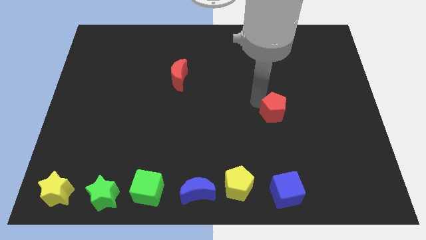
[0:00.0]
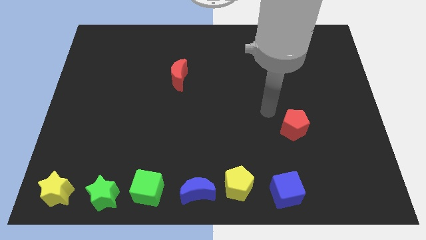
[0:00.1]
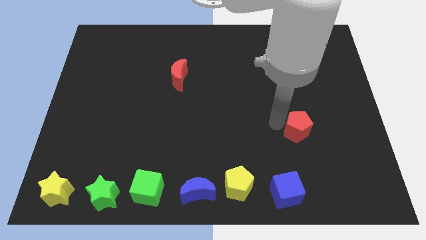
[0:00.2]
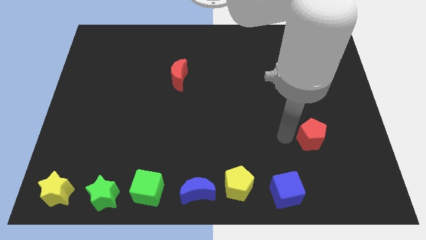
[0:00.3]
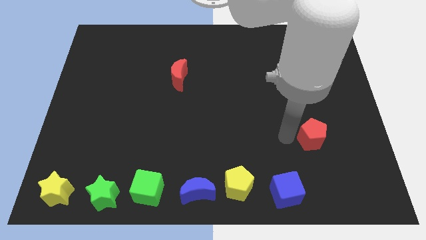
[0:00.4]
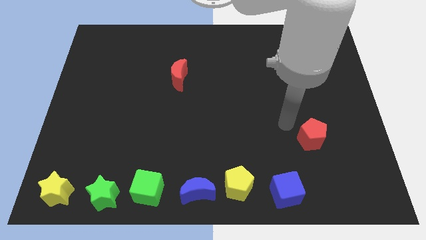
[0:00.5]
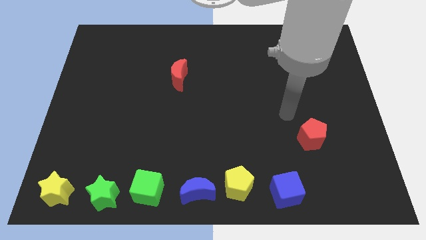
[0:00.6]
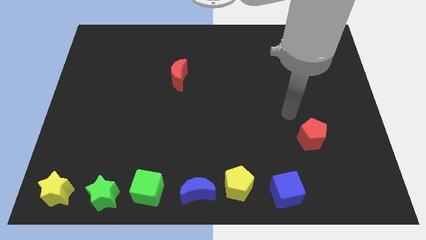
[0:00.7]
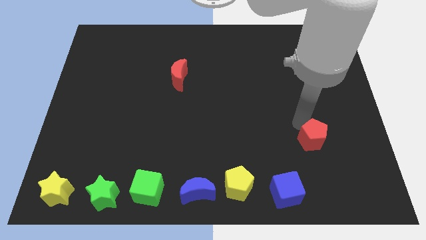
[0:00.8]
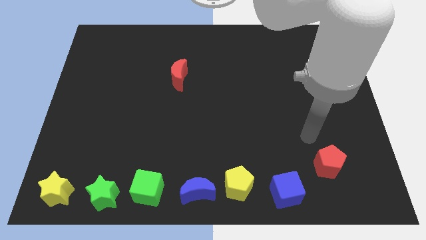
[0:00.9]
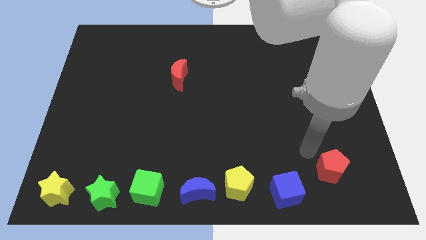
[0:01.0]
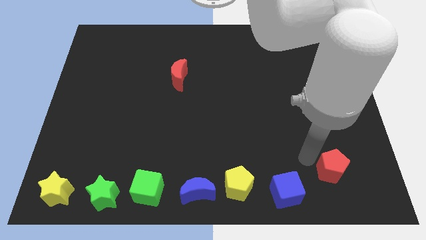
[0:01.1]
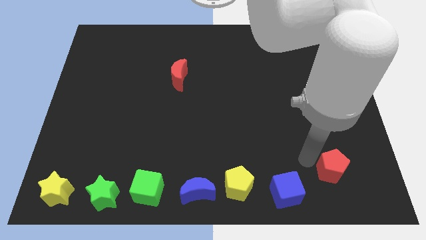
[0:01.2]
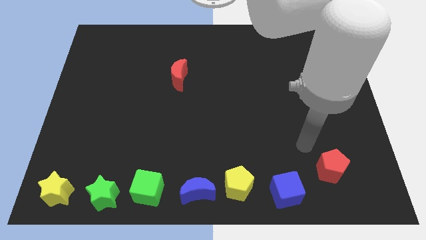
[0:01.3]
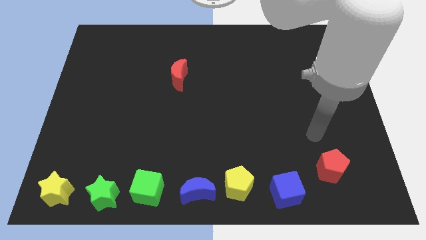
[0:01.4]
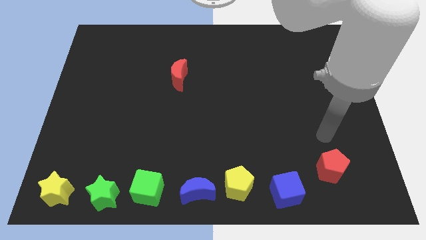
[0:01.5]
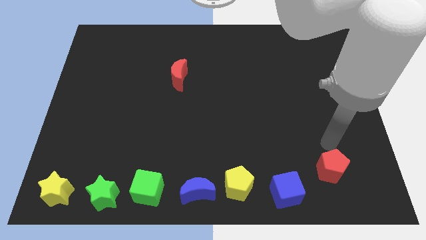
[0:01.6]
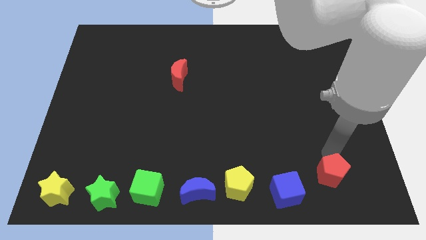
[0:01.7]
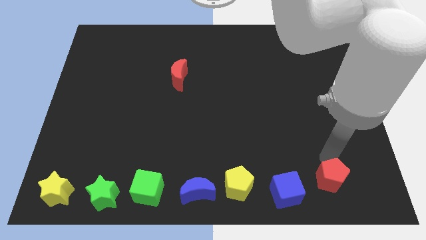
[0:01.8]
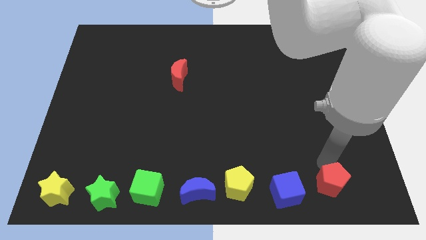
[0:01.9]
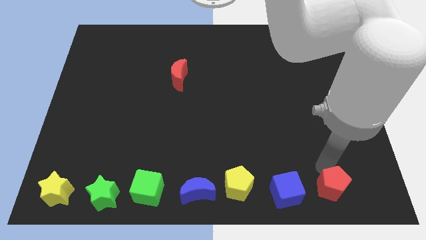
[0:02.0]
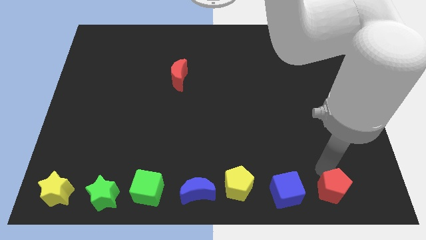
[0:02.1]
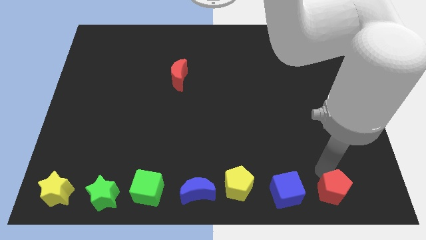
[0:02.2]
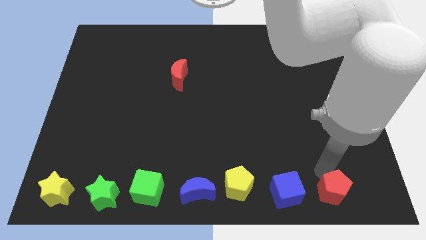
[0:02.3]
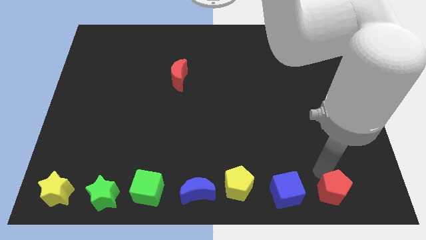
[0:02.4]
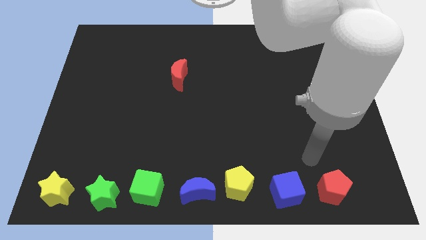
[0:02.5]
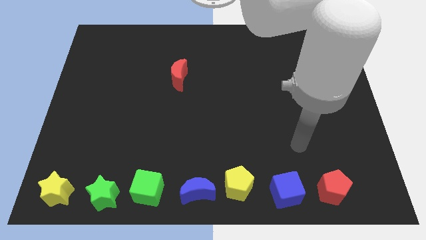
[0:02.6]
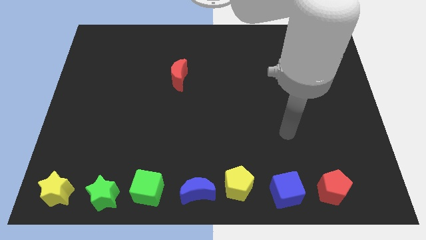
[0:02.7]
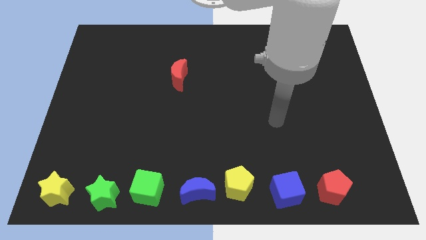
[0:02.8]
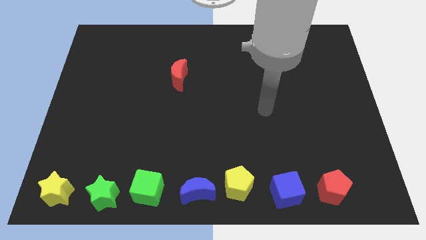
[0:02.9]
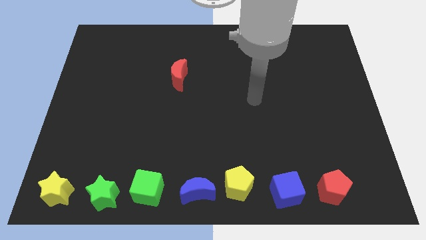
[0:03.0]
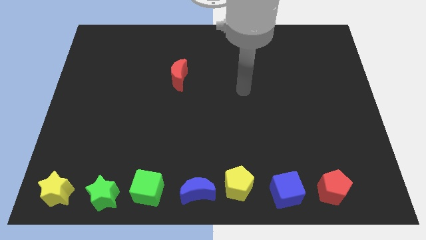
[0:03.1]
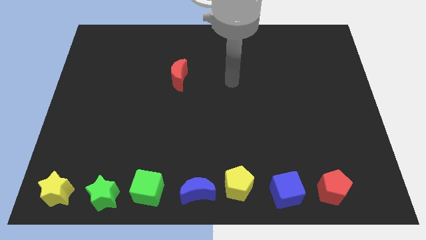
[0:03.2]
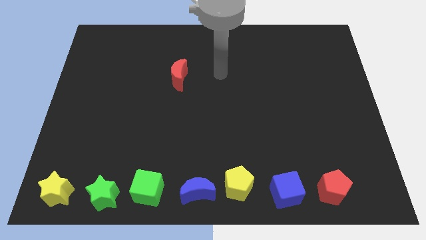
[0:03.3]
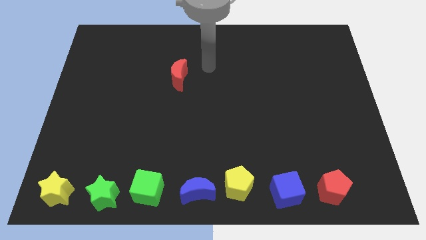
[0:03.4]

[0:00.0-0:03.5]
move red pentagon to bottom right

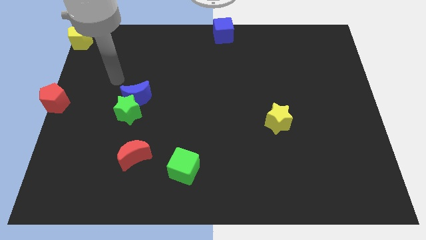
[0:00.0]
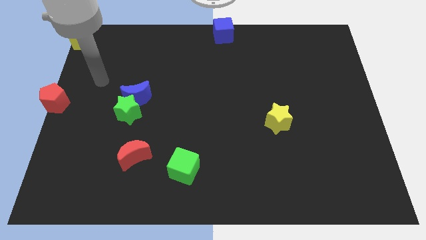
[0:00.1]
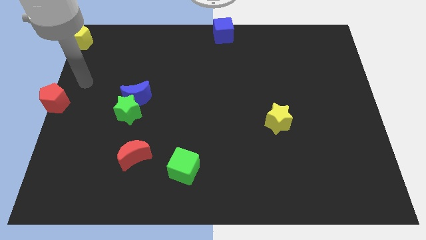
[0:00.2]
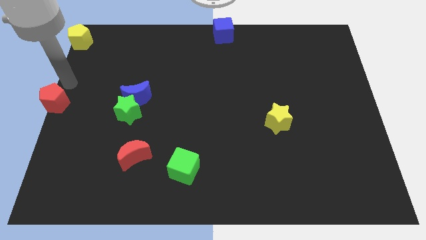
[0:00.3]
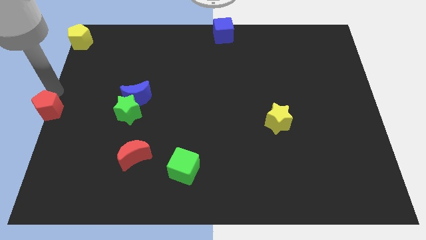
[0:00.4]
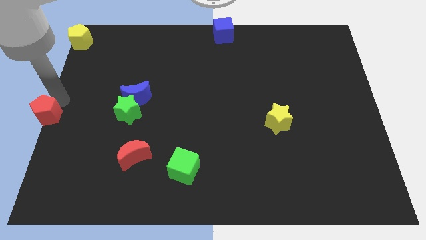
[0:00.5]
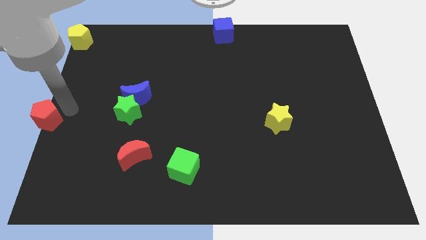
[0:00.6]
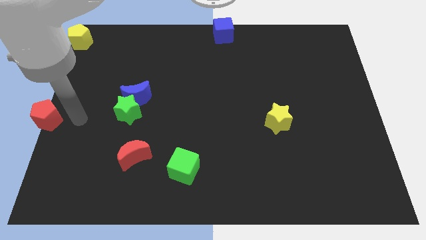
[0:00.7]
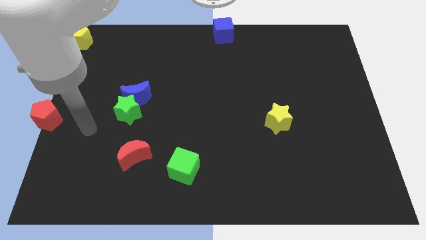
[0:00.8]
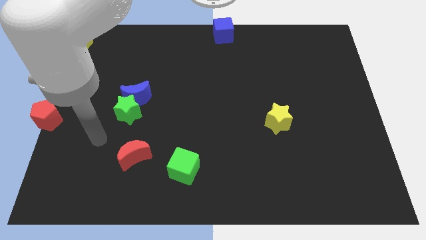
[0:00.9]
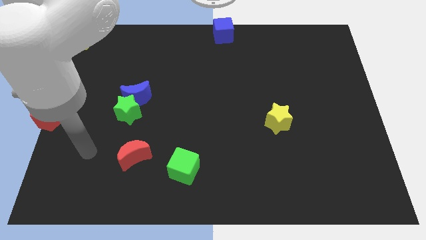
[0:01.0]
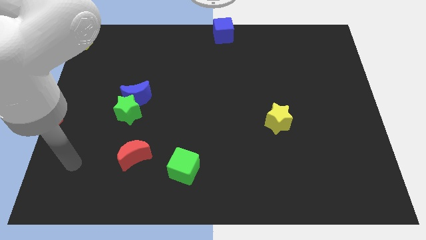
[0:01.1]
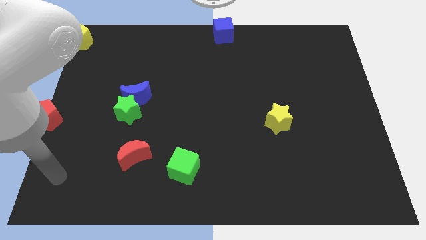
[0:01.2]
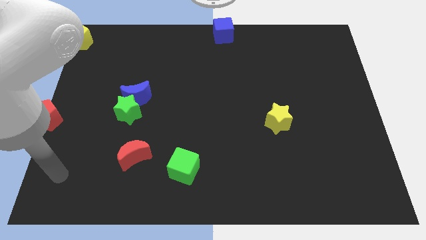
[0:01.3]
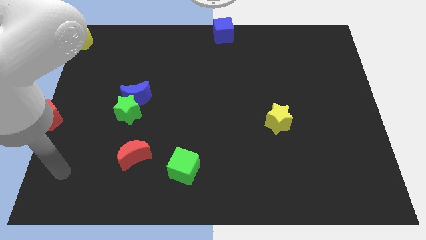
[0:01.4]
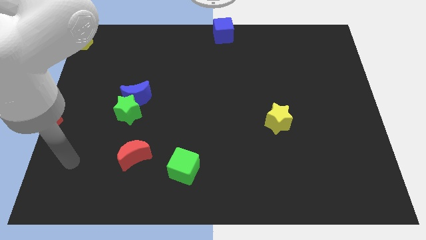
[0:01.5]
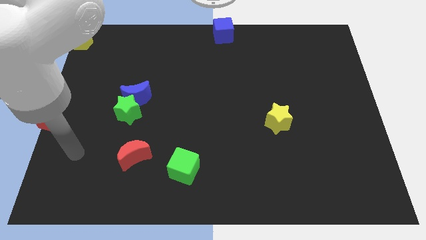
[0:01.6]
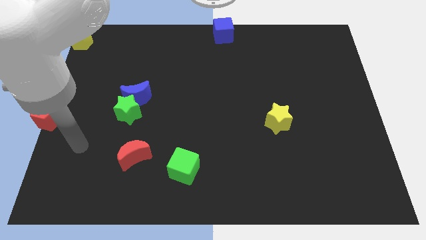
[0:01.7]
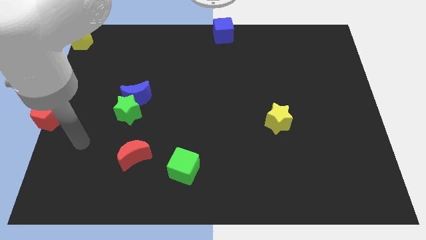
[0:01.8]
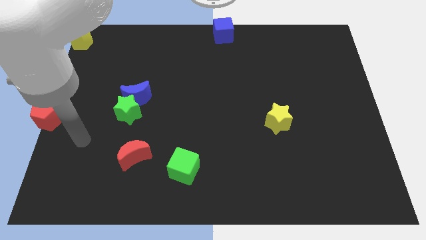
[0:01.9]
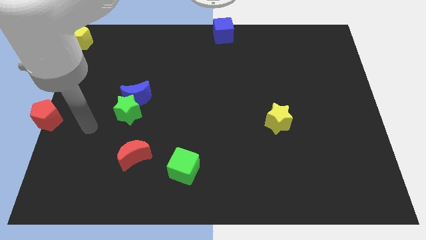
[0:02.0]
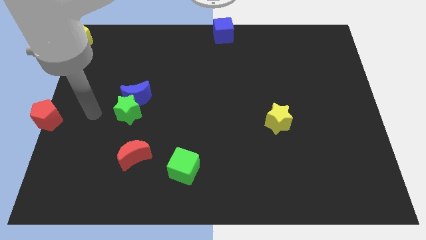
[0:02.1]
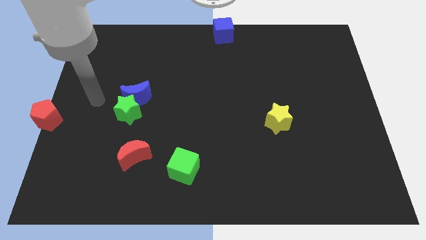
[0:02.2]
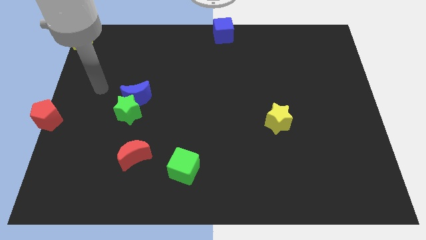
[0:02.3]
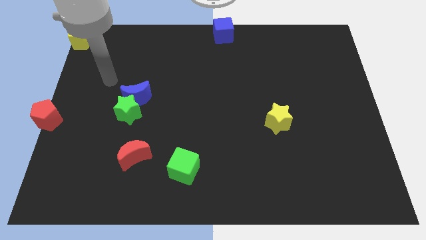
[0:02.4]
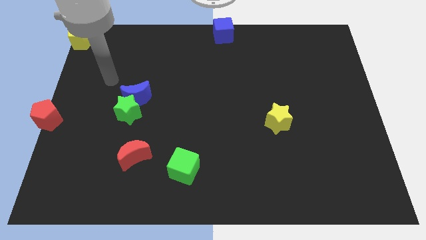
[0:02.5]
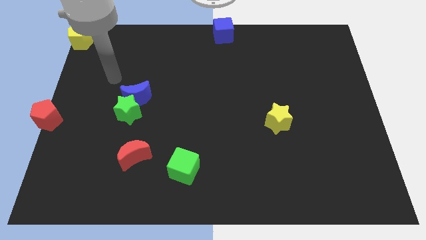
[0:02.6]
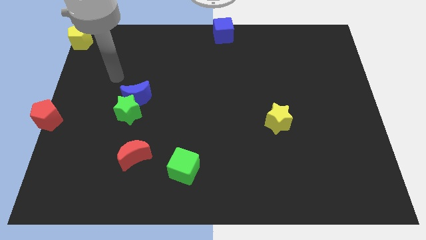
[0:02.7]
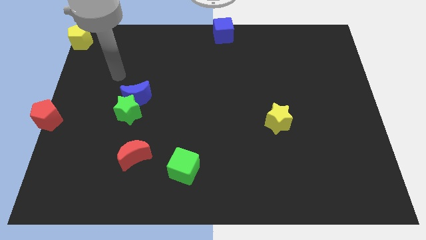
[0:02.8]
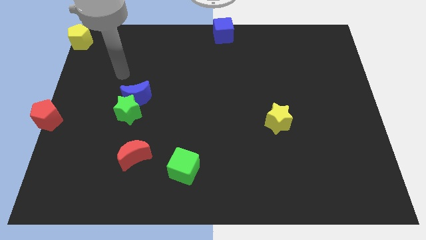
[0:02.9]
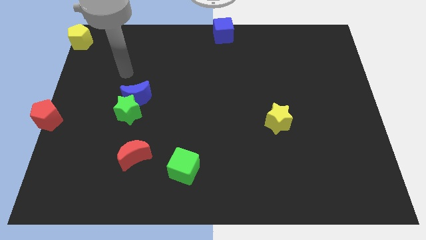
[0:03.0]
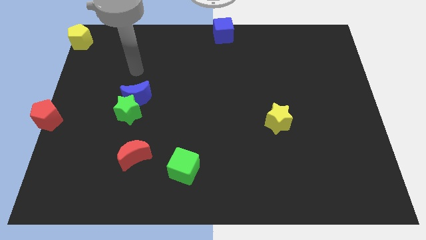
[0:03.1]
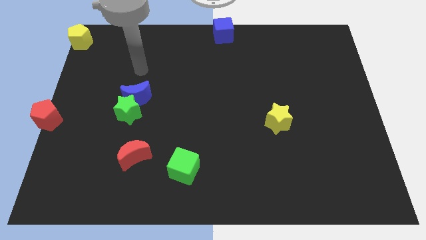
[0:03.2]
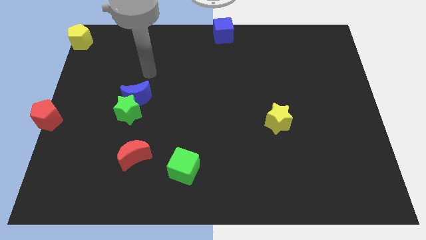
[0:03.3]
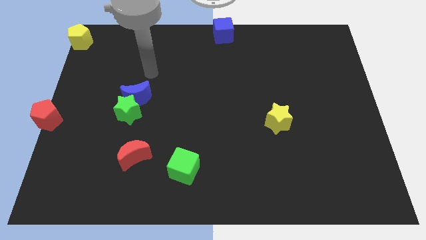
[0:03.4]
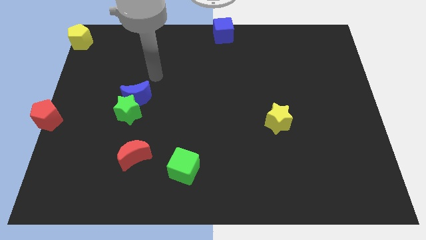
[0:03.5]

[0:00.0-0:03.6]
move the red pentagon horizontally to the left side of the green star

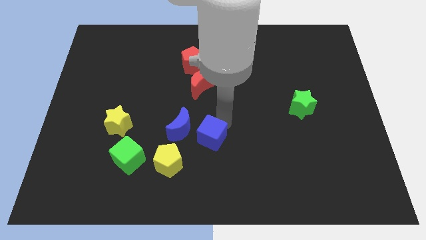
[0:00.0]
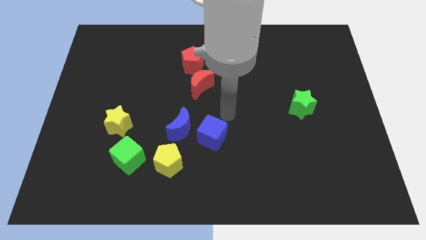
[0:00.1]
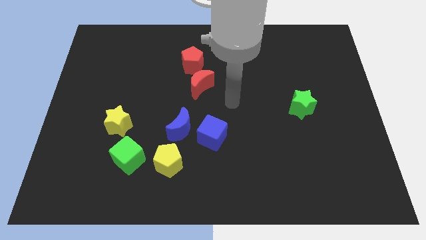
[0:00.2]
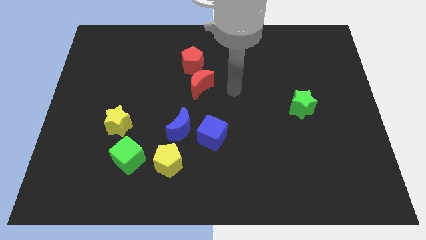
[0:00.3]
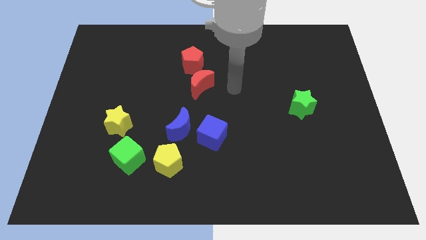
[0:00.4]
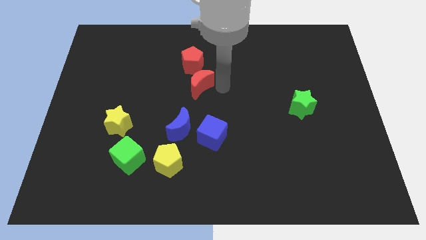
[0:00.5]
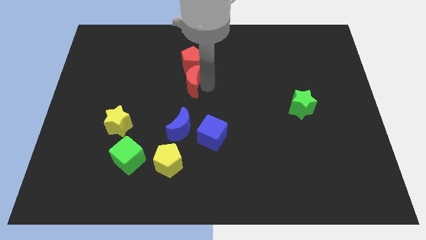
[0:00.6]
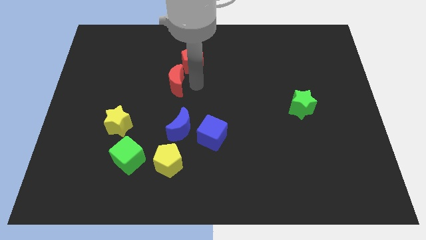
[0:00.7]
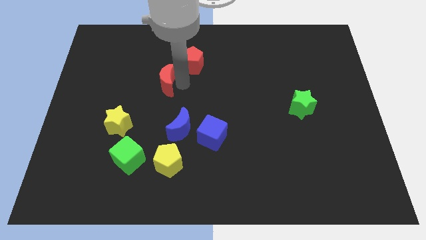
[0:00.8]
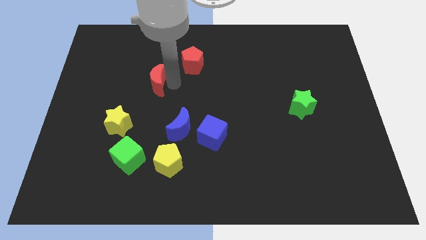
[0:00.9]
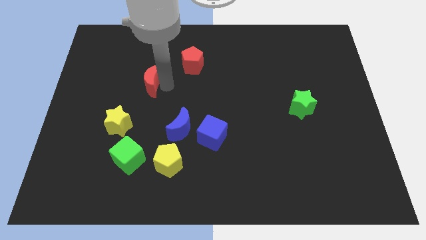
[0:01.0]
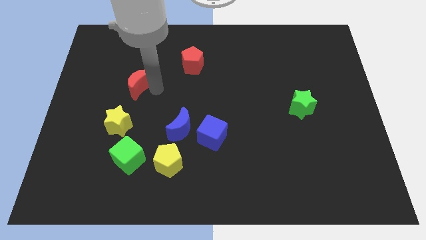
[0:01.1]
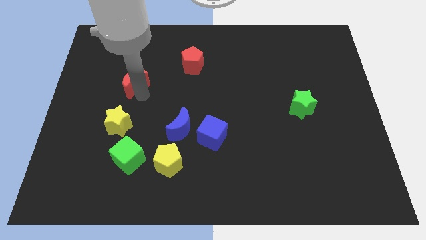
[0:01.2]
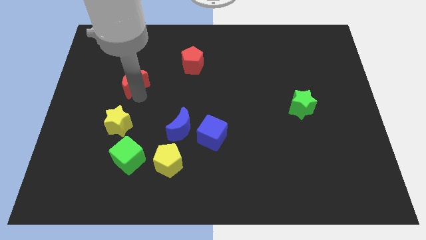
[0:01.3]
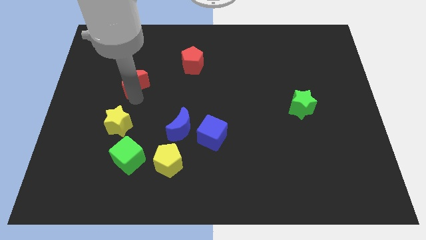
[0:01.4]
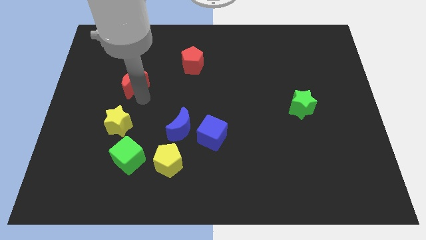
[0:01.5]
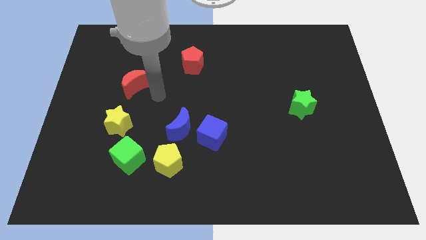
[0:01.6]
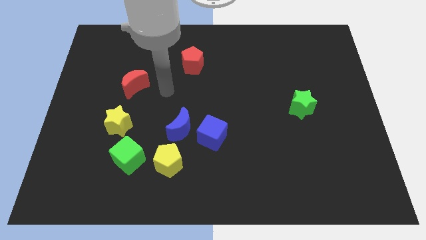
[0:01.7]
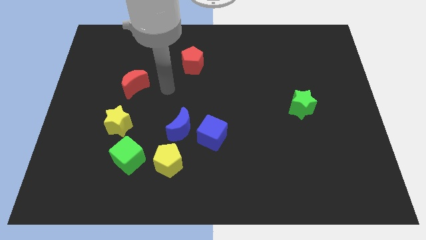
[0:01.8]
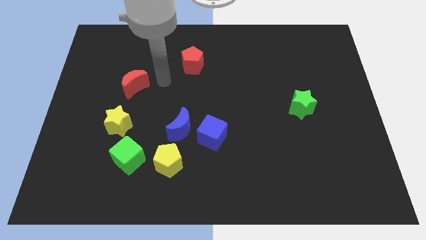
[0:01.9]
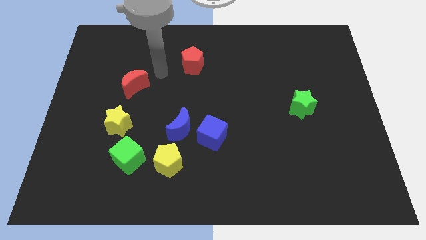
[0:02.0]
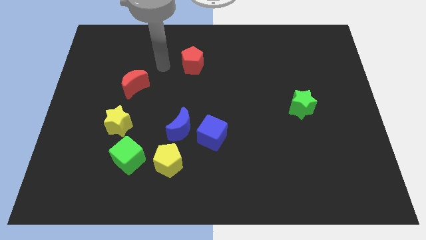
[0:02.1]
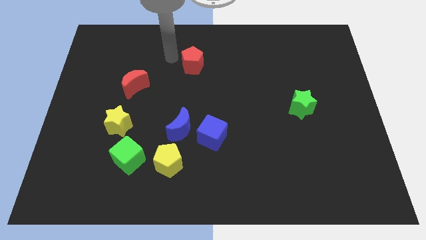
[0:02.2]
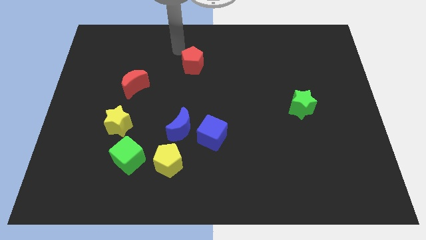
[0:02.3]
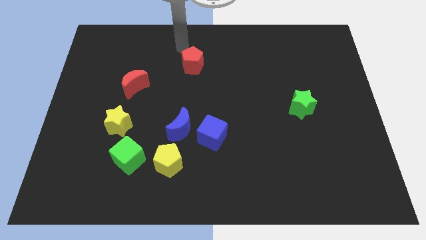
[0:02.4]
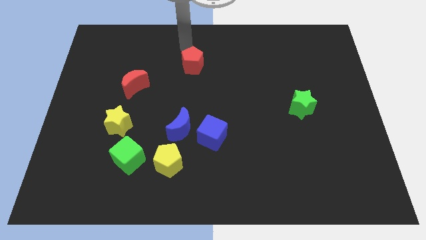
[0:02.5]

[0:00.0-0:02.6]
put the red moon vertically above the green cube
